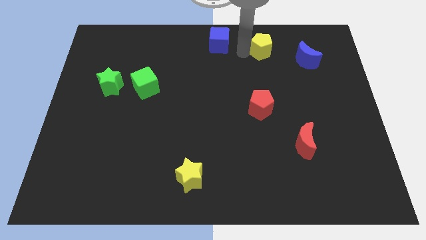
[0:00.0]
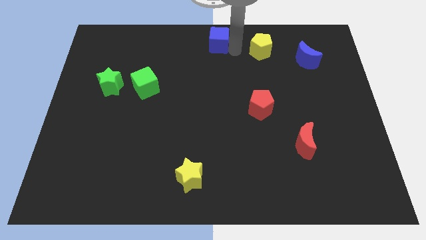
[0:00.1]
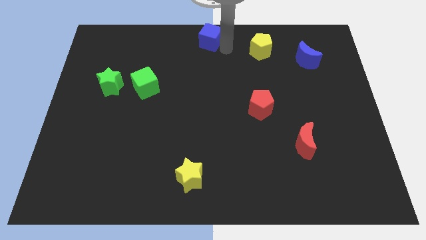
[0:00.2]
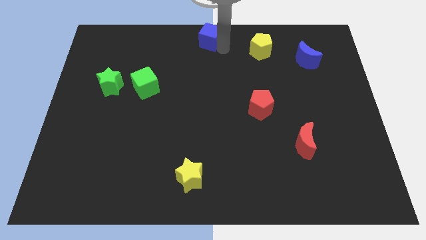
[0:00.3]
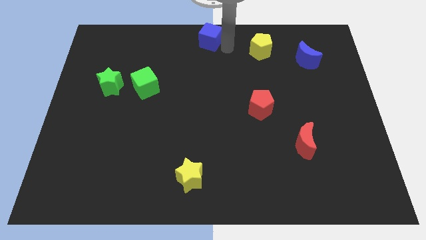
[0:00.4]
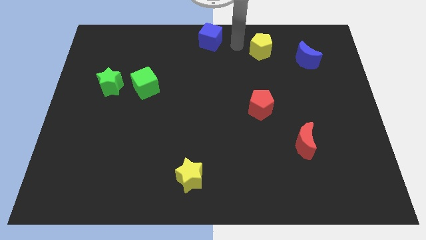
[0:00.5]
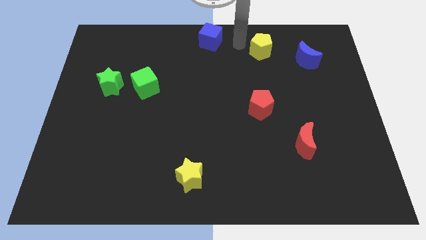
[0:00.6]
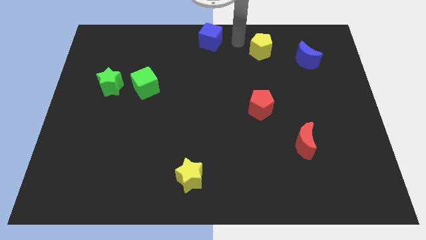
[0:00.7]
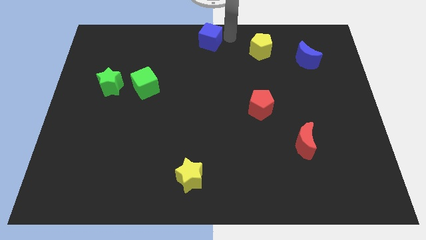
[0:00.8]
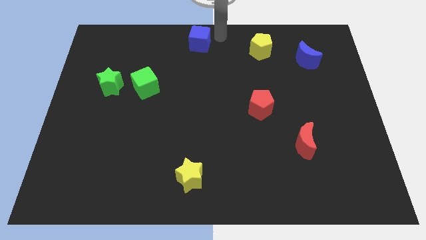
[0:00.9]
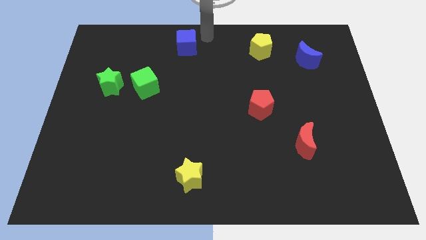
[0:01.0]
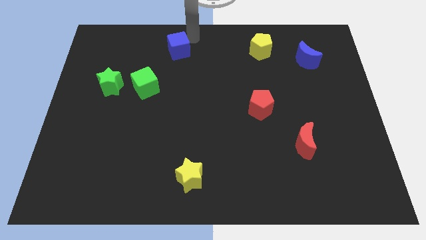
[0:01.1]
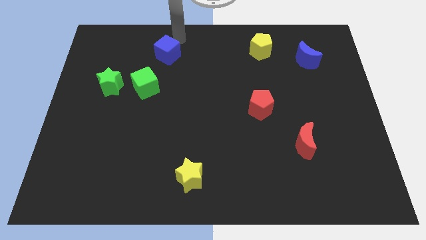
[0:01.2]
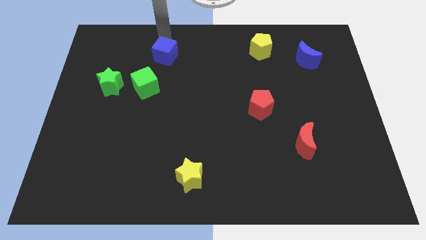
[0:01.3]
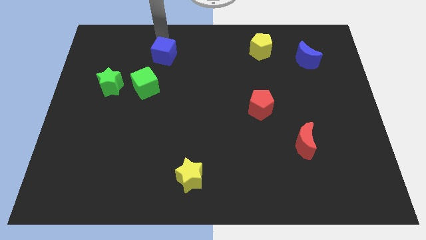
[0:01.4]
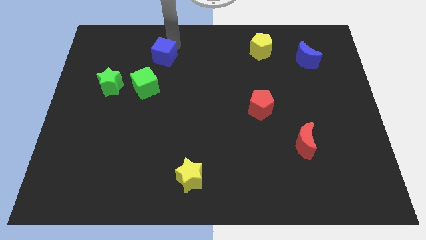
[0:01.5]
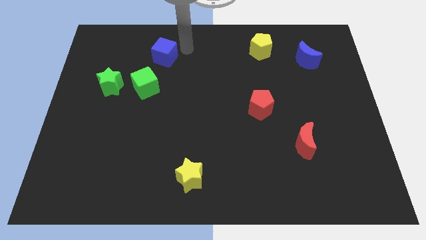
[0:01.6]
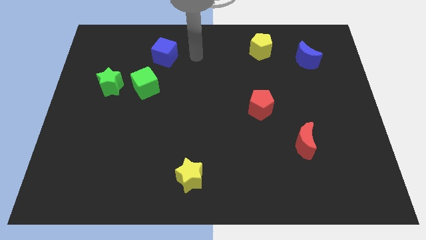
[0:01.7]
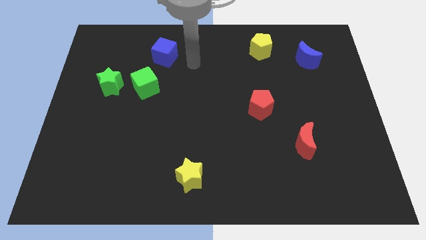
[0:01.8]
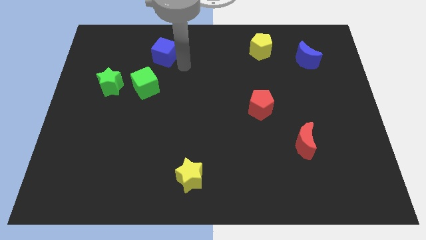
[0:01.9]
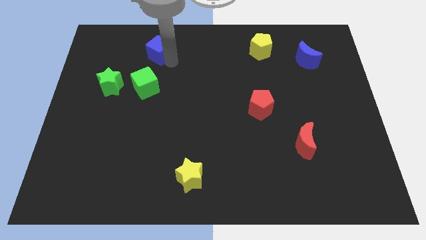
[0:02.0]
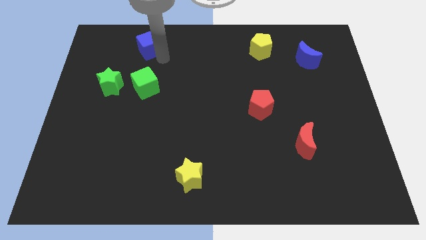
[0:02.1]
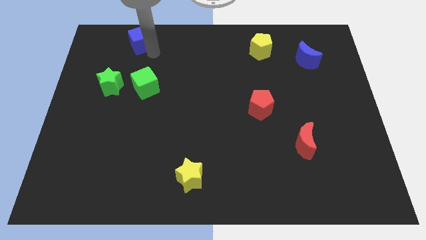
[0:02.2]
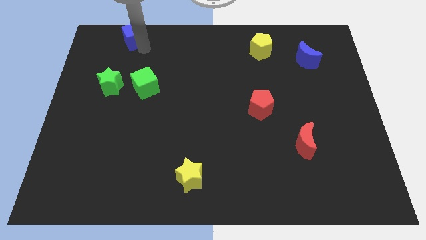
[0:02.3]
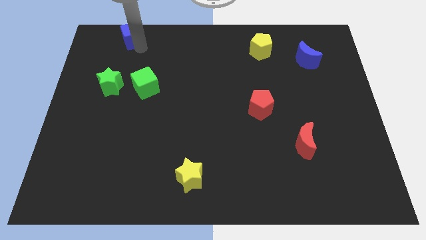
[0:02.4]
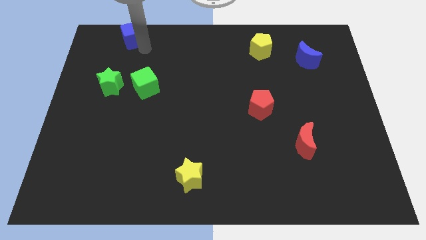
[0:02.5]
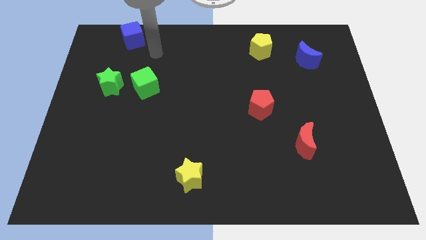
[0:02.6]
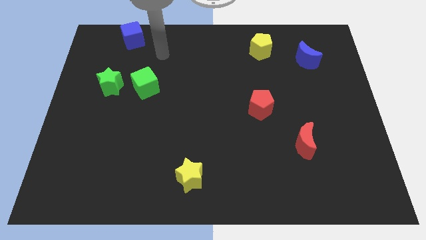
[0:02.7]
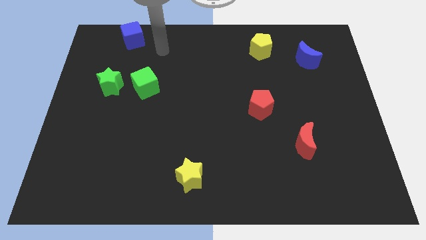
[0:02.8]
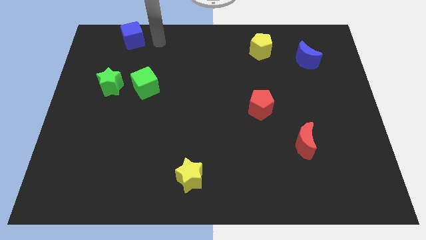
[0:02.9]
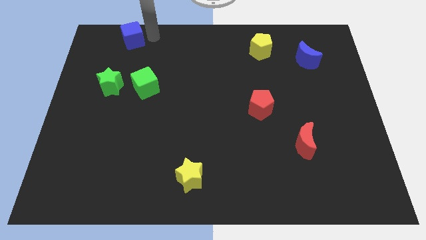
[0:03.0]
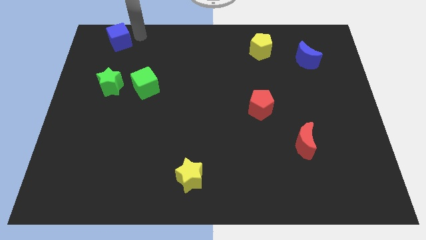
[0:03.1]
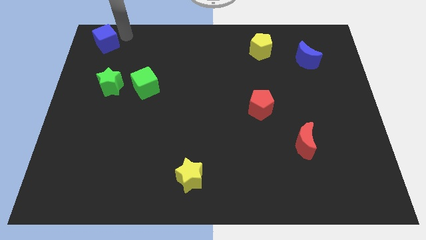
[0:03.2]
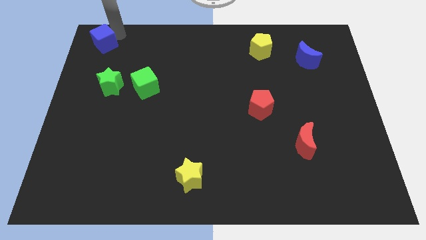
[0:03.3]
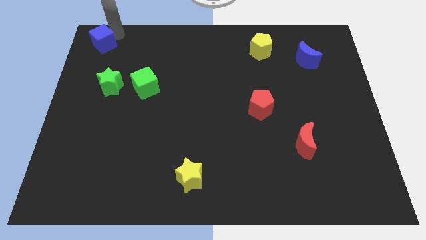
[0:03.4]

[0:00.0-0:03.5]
move the blue cube to the top of the green star

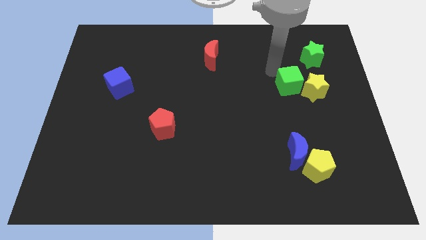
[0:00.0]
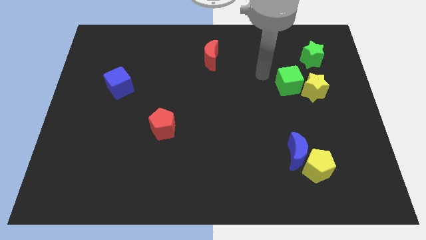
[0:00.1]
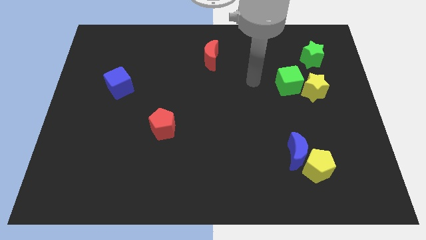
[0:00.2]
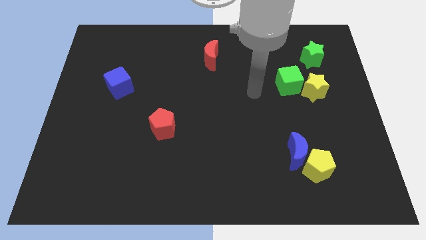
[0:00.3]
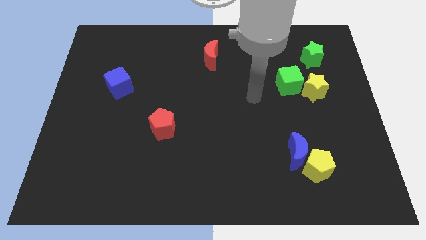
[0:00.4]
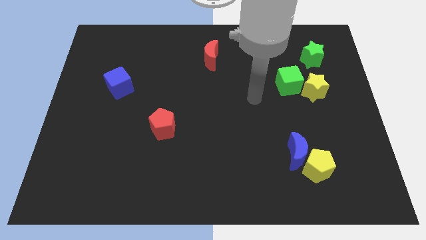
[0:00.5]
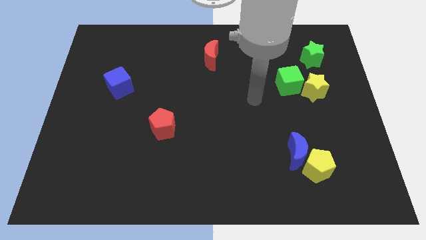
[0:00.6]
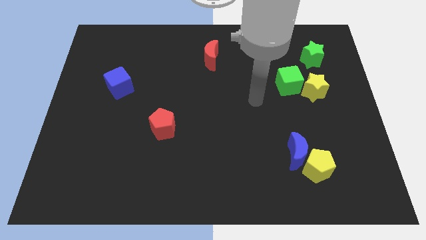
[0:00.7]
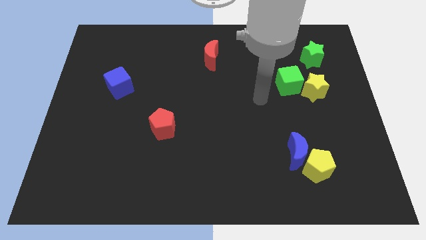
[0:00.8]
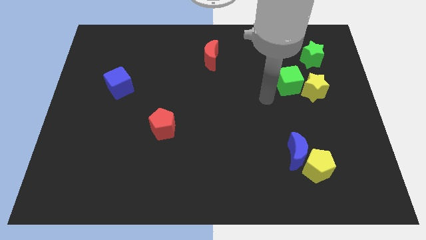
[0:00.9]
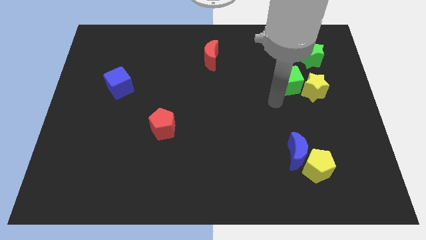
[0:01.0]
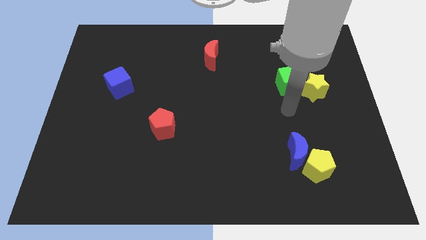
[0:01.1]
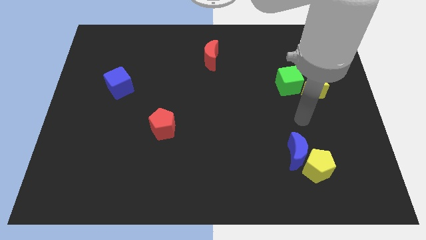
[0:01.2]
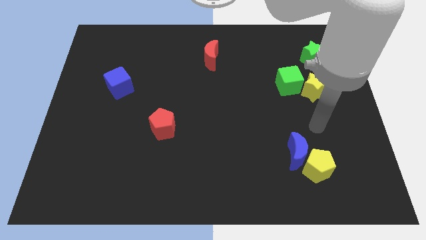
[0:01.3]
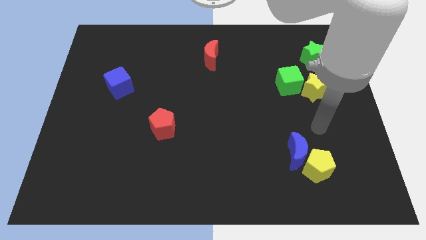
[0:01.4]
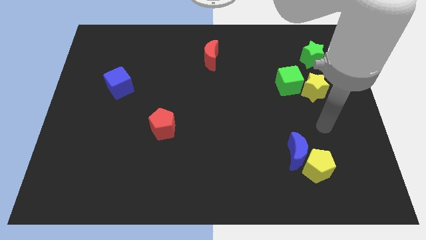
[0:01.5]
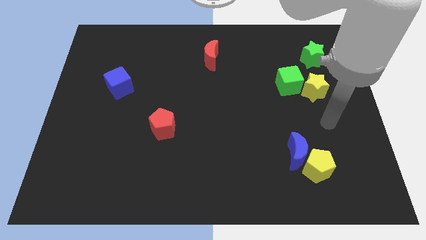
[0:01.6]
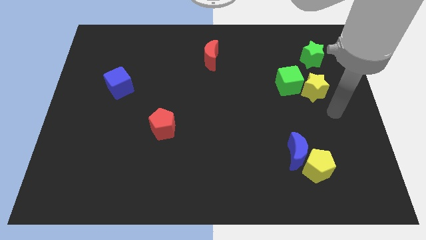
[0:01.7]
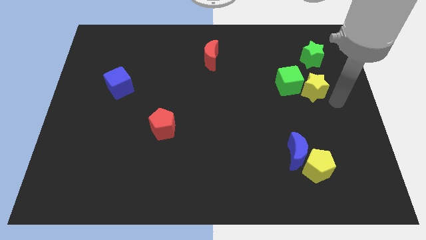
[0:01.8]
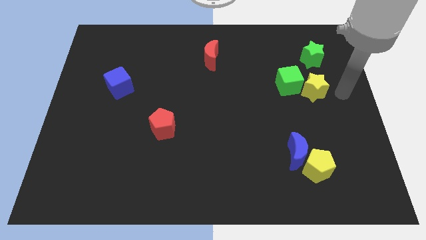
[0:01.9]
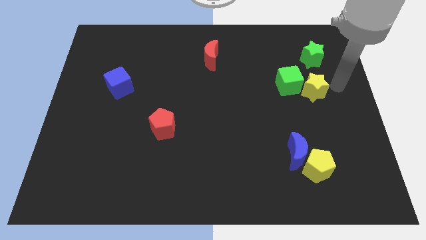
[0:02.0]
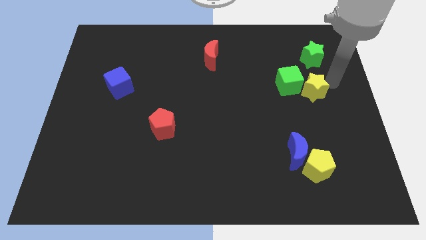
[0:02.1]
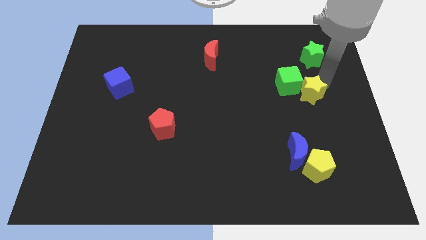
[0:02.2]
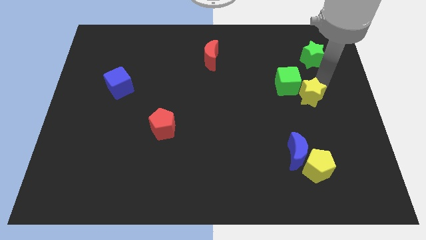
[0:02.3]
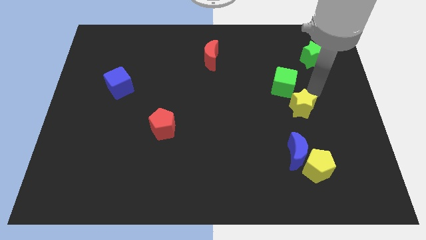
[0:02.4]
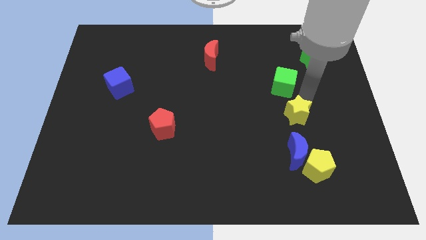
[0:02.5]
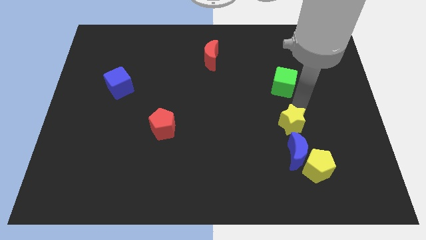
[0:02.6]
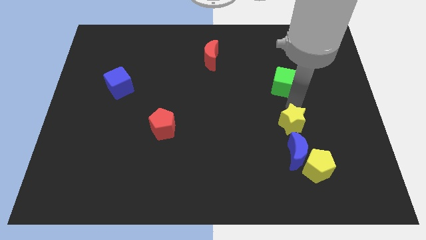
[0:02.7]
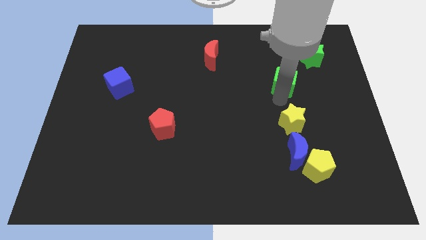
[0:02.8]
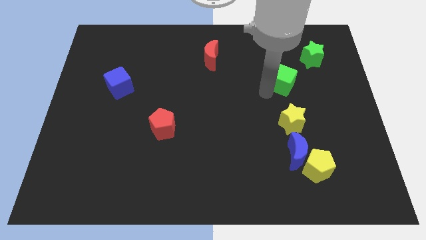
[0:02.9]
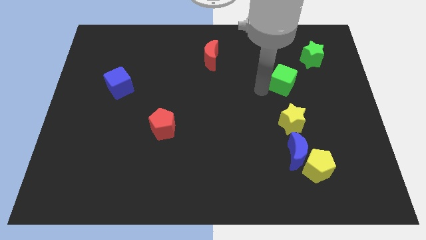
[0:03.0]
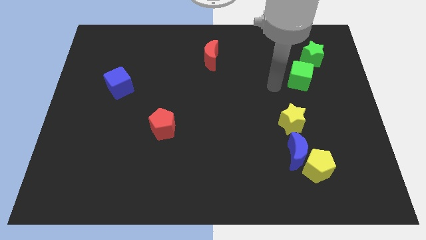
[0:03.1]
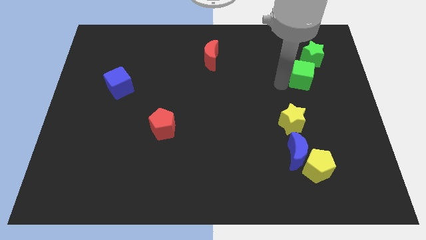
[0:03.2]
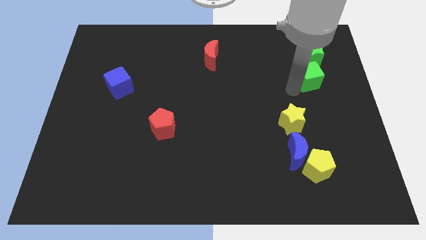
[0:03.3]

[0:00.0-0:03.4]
push the green cube and yellow star diagonally on the bottom left side of the green star

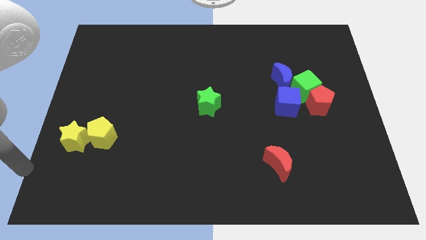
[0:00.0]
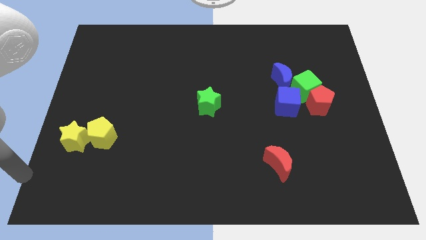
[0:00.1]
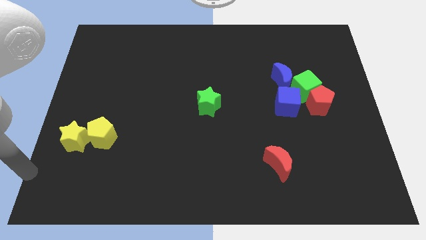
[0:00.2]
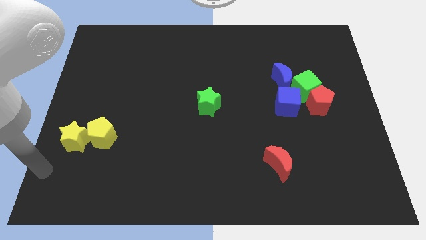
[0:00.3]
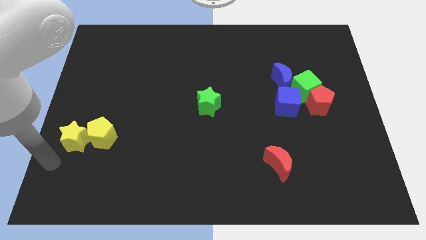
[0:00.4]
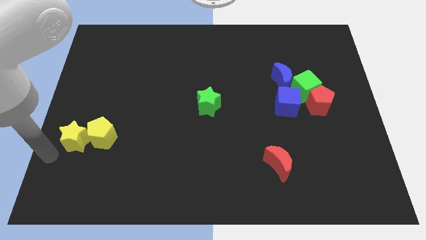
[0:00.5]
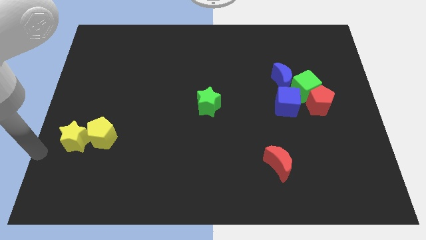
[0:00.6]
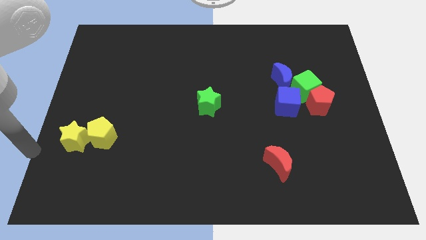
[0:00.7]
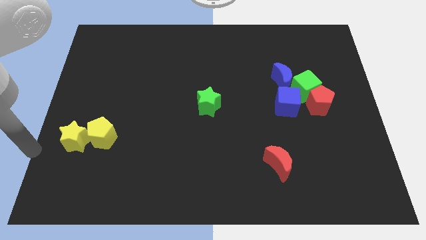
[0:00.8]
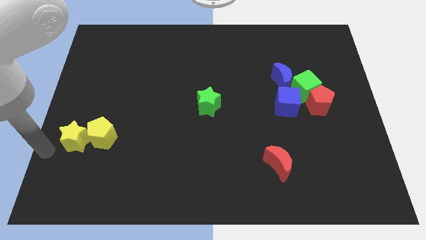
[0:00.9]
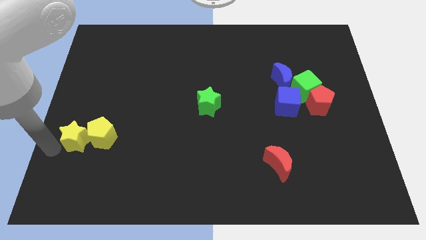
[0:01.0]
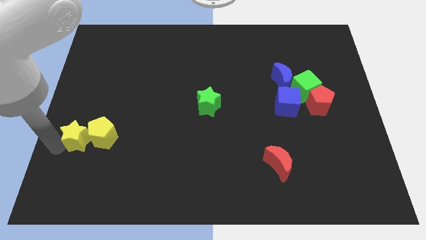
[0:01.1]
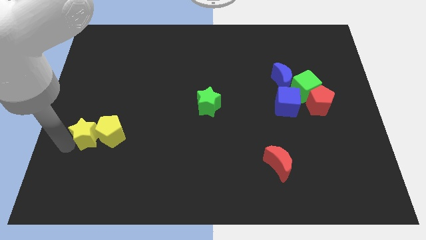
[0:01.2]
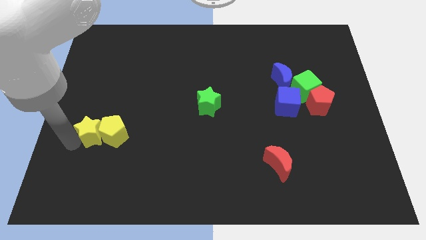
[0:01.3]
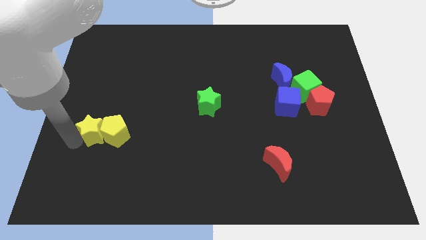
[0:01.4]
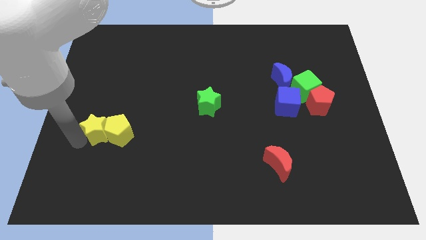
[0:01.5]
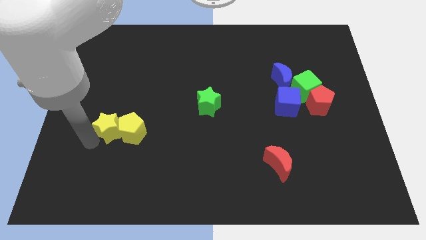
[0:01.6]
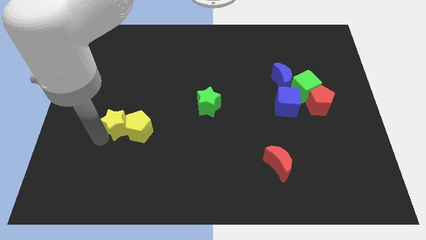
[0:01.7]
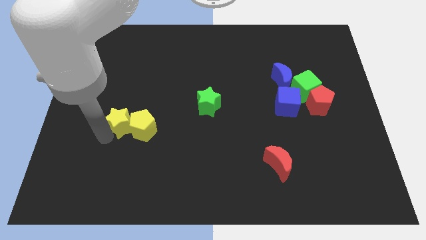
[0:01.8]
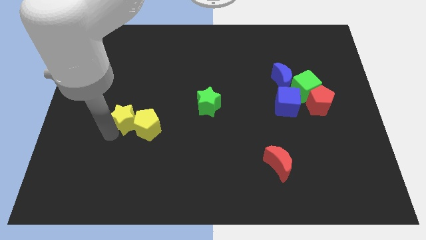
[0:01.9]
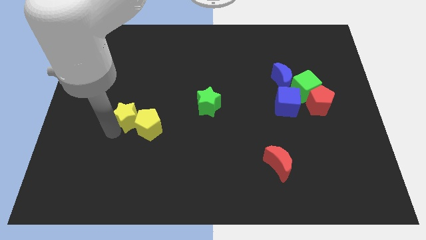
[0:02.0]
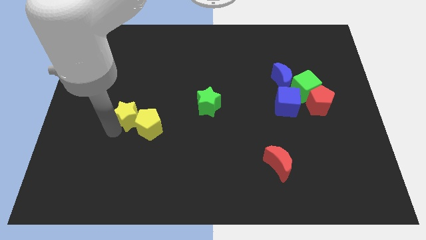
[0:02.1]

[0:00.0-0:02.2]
push the yellow star into the yellow pentagon
